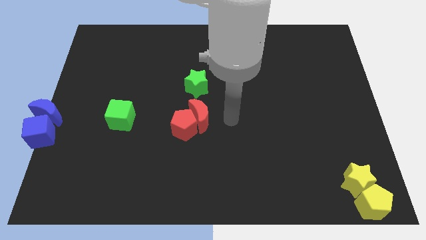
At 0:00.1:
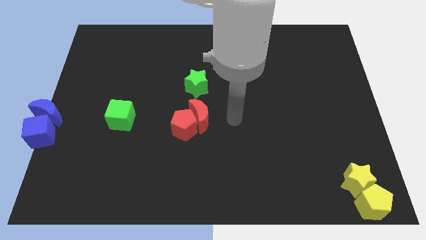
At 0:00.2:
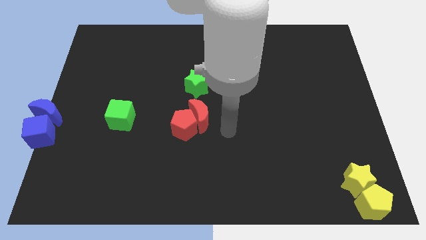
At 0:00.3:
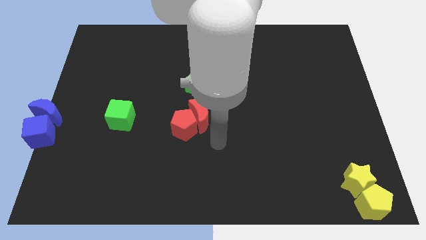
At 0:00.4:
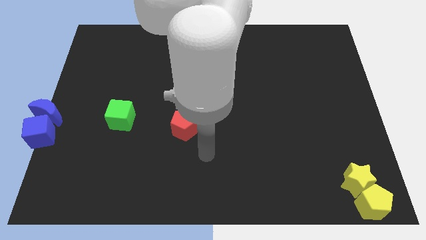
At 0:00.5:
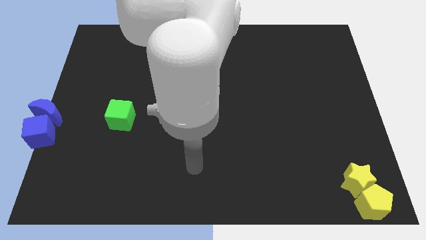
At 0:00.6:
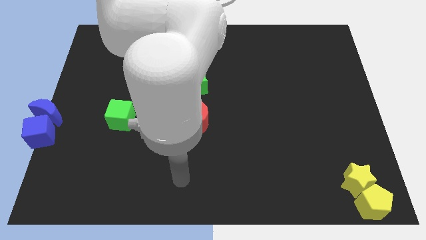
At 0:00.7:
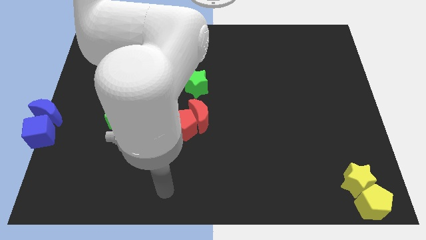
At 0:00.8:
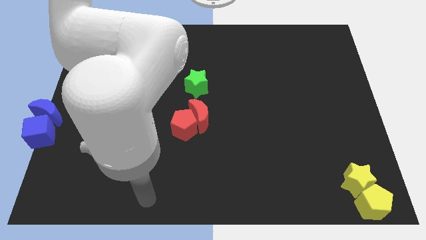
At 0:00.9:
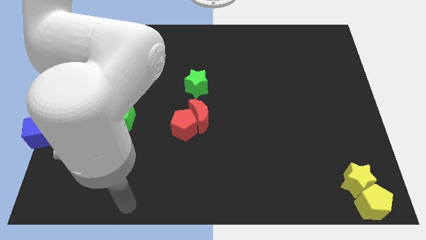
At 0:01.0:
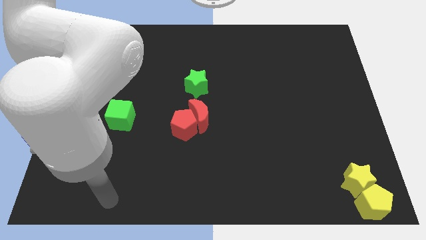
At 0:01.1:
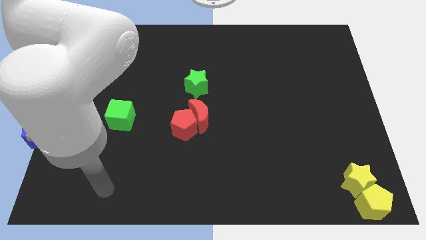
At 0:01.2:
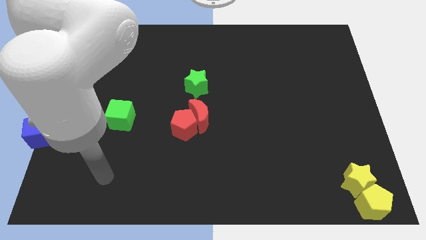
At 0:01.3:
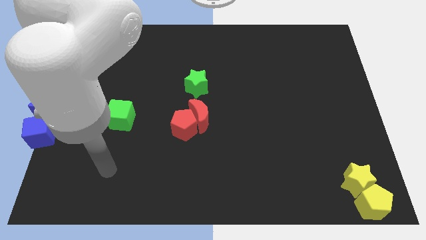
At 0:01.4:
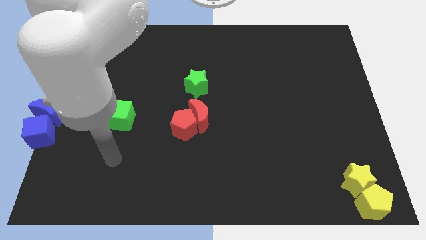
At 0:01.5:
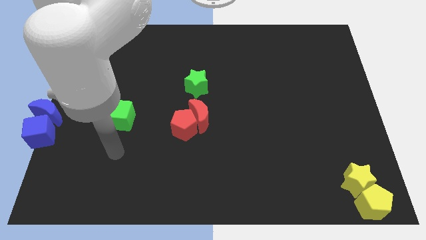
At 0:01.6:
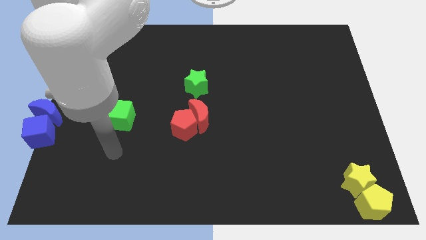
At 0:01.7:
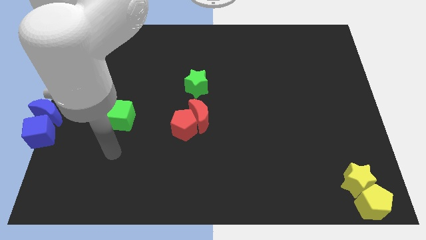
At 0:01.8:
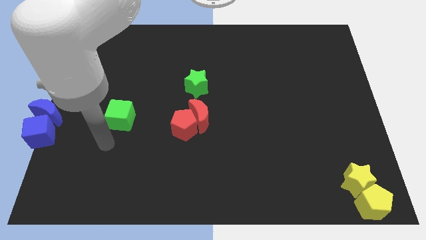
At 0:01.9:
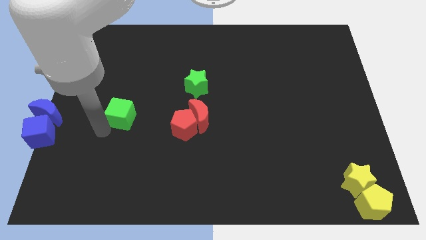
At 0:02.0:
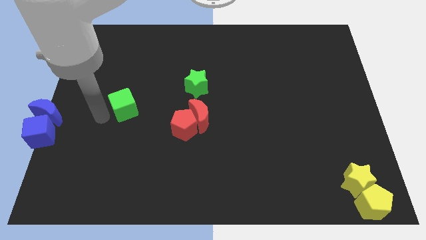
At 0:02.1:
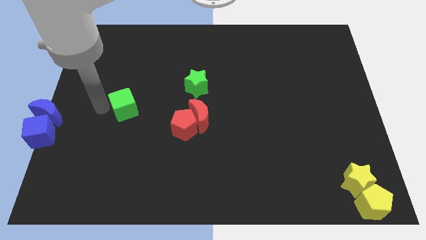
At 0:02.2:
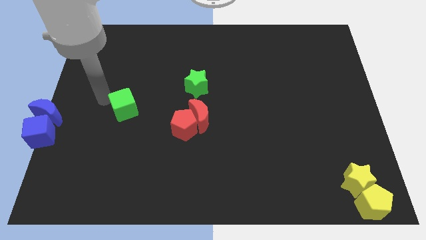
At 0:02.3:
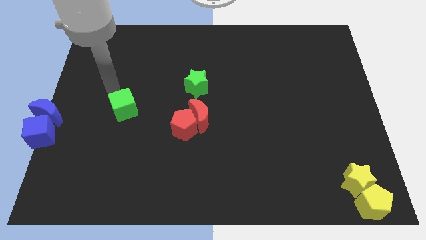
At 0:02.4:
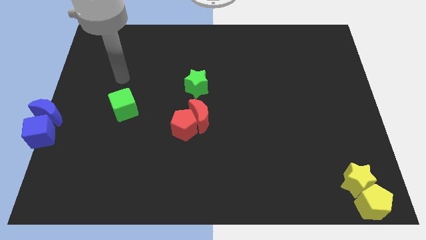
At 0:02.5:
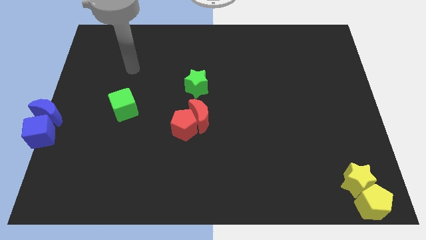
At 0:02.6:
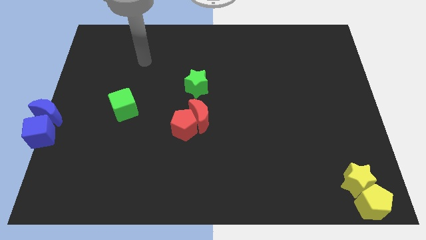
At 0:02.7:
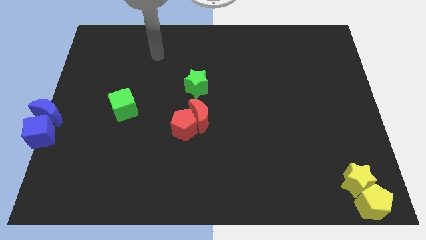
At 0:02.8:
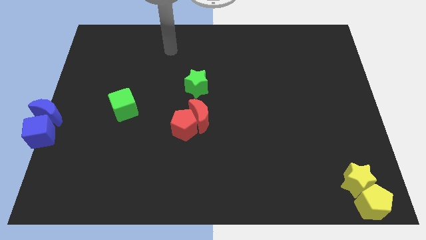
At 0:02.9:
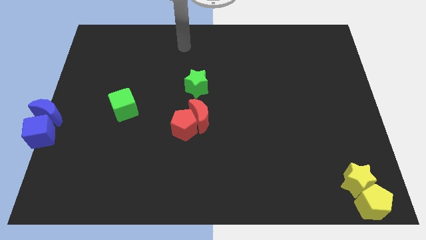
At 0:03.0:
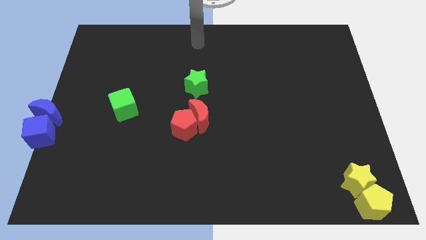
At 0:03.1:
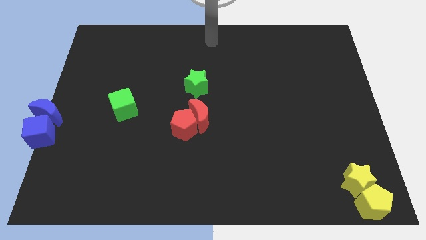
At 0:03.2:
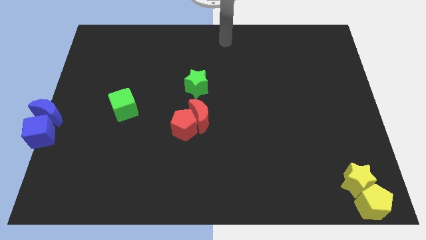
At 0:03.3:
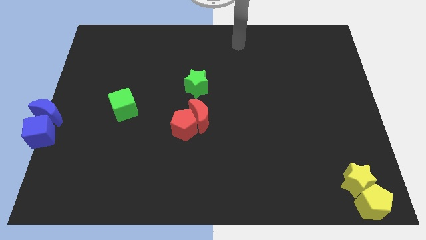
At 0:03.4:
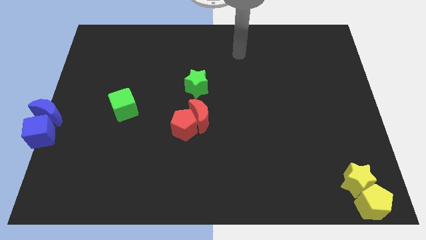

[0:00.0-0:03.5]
slightly push the green cube to the top

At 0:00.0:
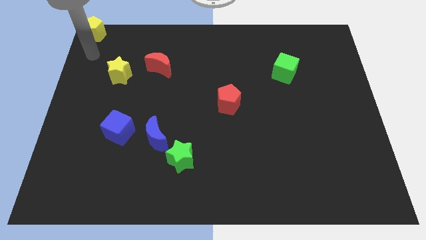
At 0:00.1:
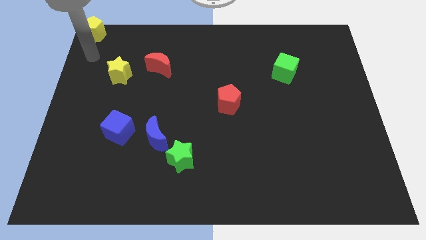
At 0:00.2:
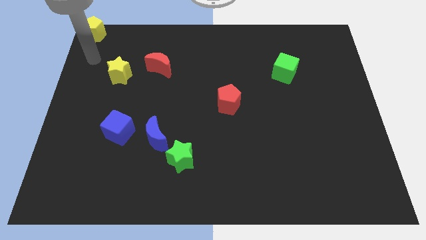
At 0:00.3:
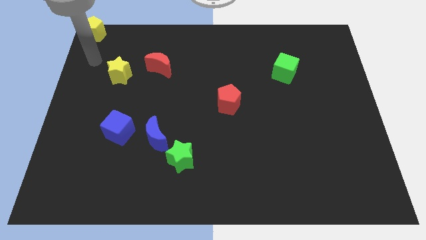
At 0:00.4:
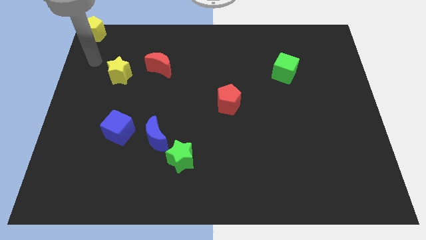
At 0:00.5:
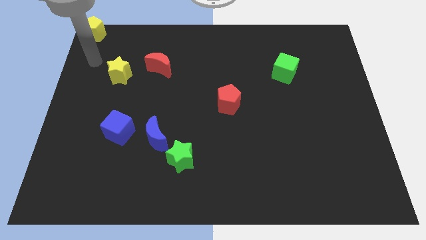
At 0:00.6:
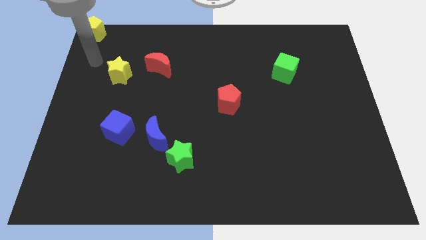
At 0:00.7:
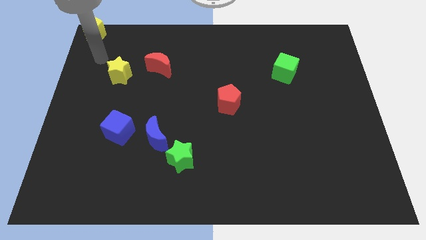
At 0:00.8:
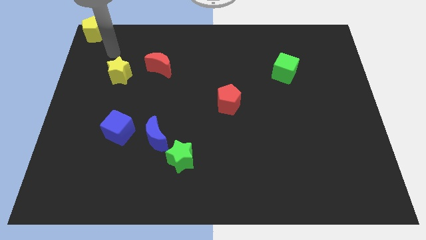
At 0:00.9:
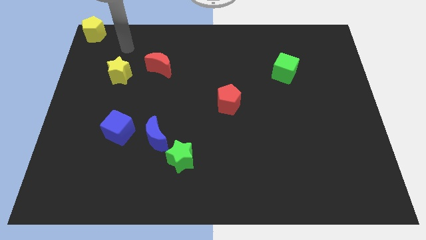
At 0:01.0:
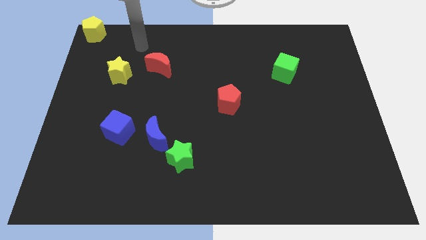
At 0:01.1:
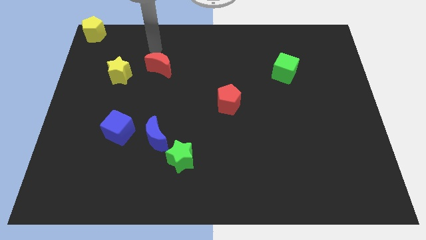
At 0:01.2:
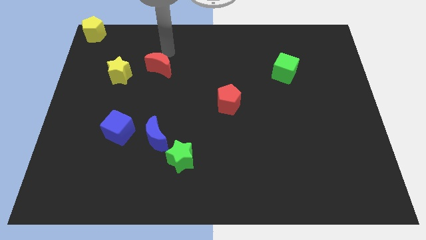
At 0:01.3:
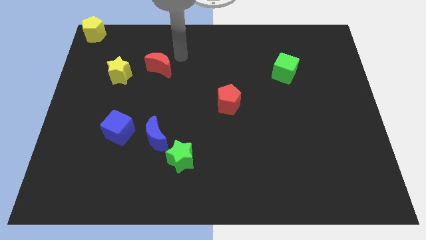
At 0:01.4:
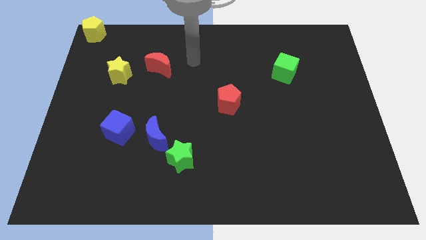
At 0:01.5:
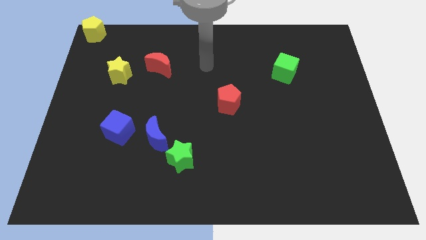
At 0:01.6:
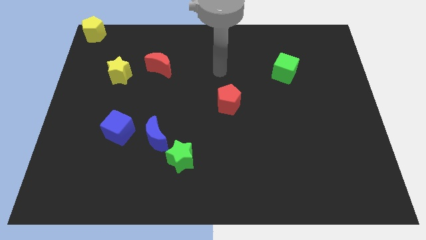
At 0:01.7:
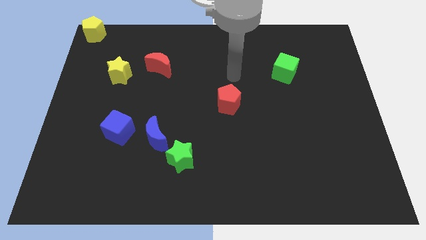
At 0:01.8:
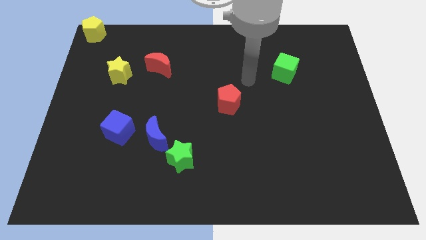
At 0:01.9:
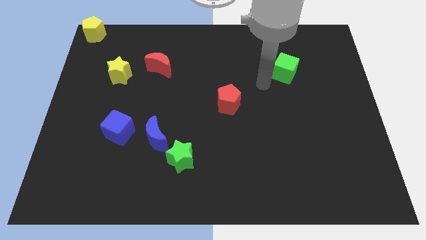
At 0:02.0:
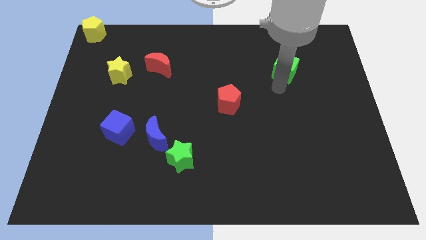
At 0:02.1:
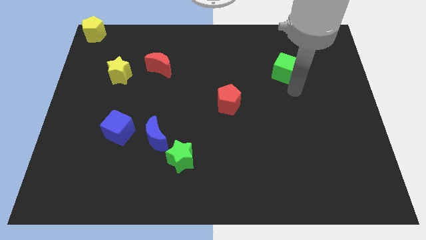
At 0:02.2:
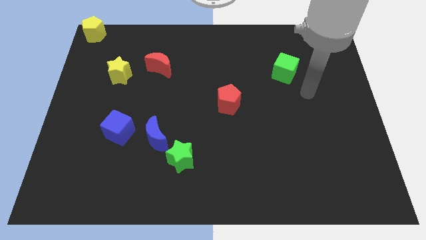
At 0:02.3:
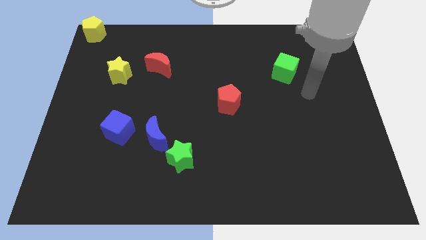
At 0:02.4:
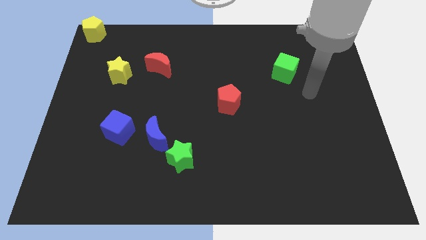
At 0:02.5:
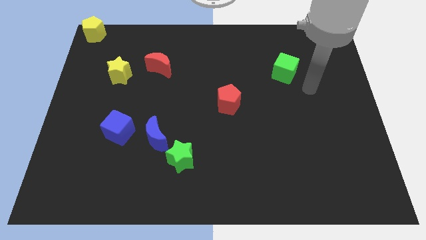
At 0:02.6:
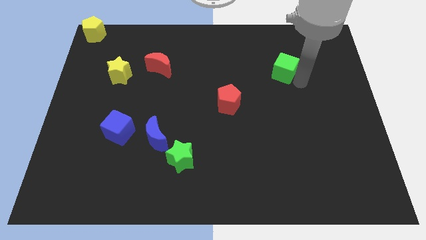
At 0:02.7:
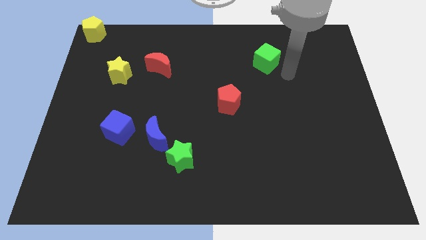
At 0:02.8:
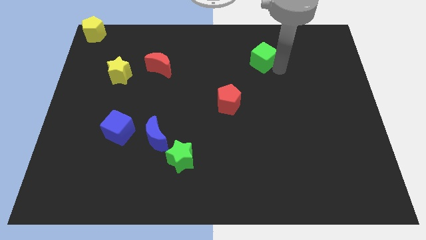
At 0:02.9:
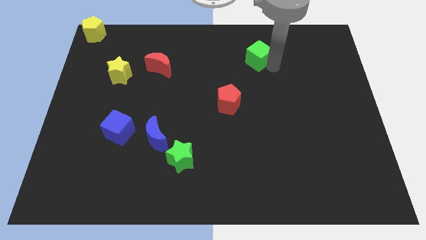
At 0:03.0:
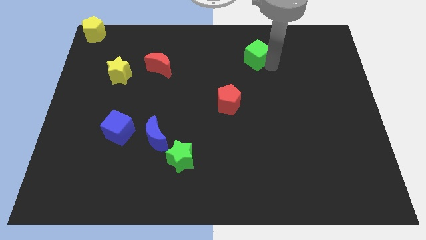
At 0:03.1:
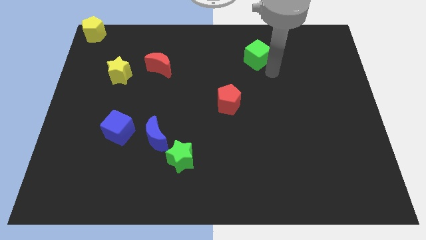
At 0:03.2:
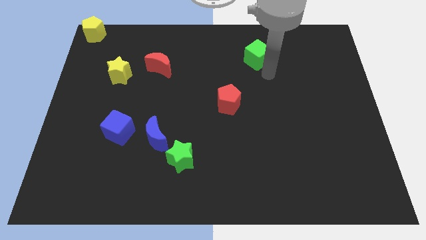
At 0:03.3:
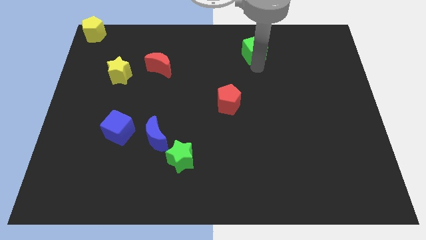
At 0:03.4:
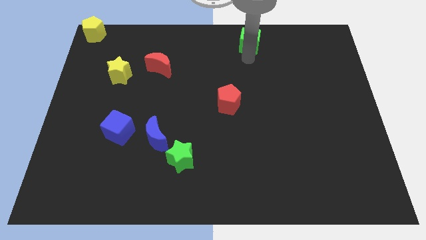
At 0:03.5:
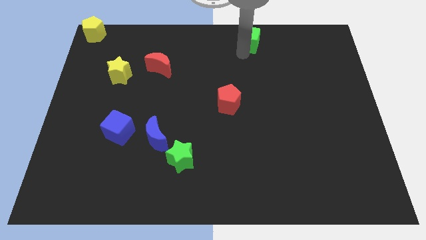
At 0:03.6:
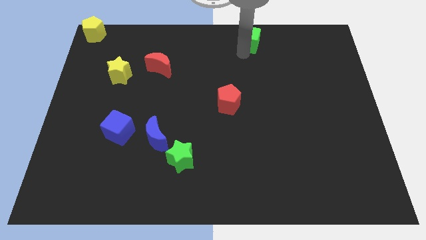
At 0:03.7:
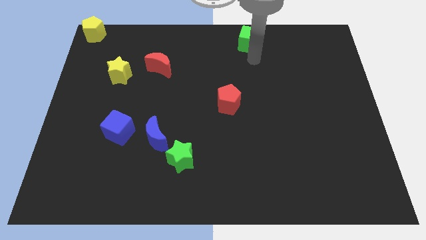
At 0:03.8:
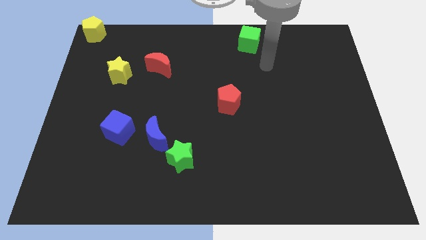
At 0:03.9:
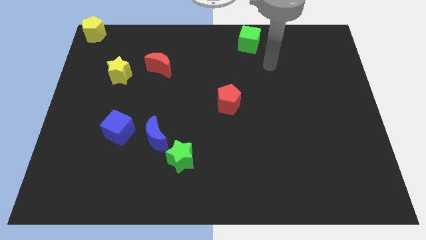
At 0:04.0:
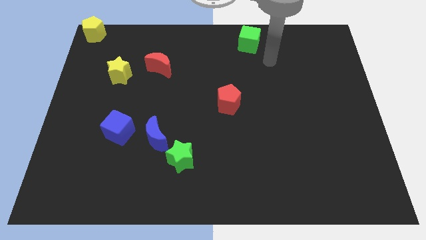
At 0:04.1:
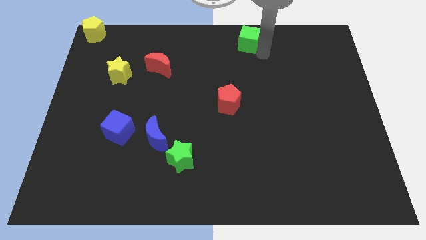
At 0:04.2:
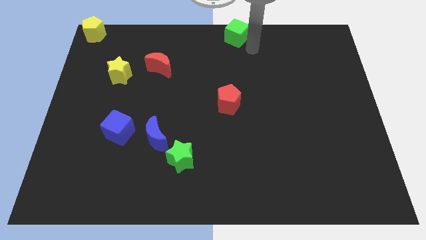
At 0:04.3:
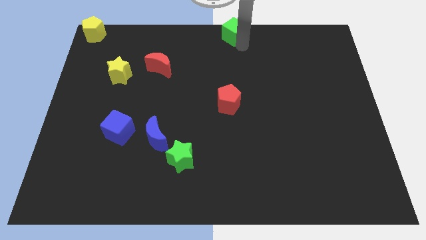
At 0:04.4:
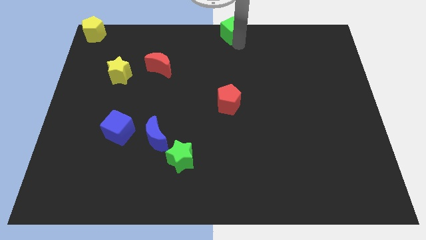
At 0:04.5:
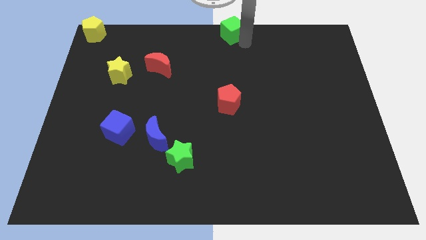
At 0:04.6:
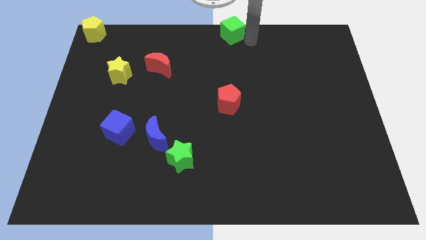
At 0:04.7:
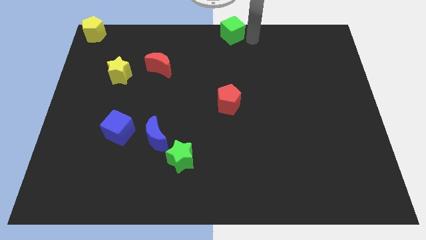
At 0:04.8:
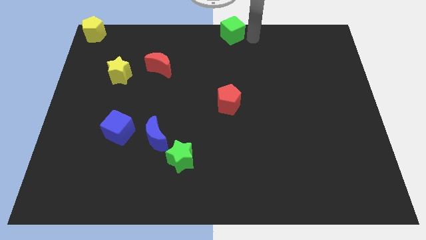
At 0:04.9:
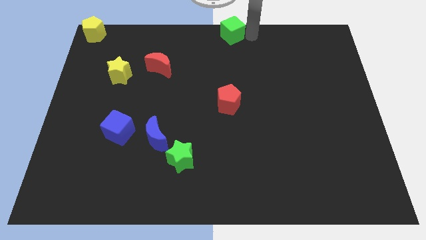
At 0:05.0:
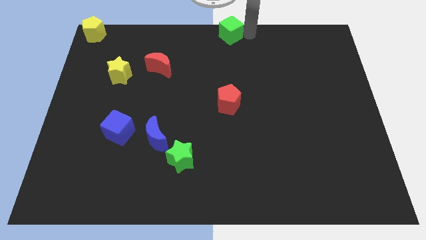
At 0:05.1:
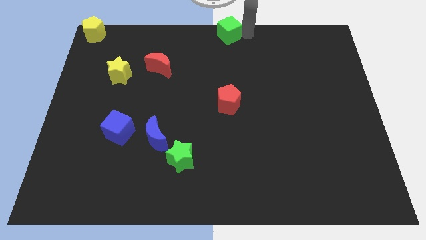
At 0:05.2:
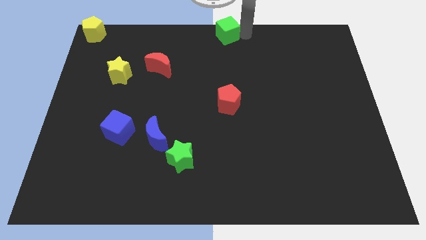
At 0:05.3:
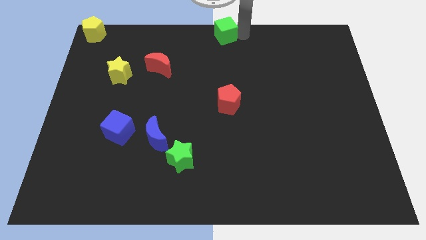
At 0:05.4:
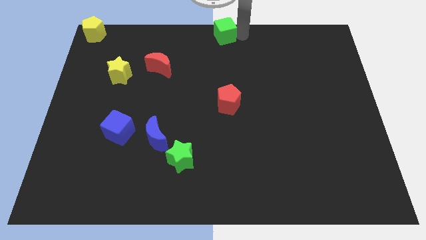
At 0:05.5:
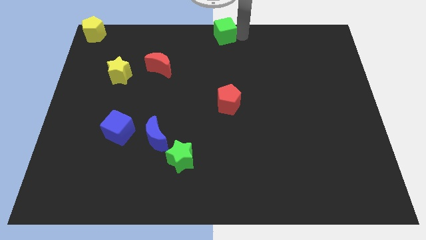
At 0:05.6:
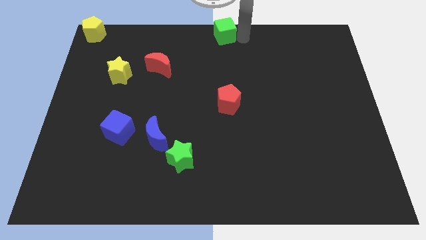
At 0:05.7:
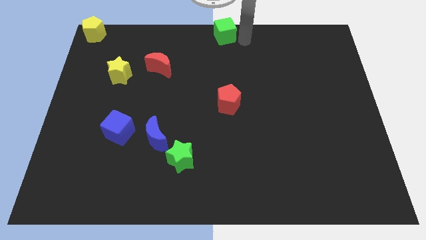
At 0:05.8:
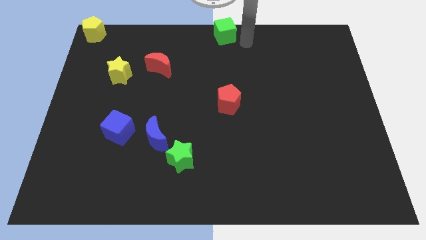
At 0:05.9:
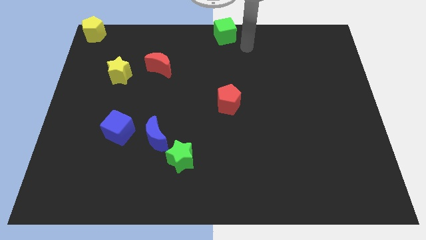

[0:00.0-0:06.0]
move green cube to the top center
